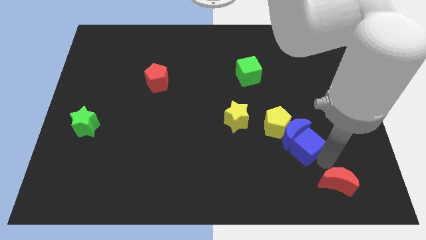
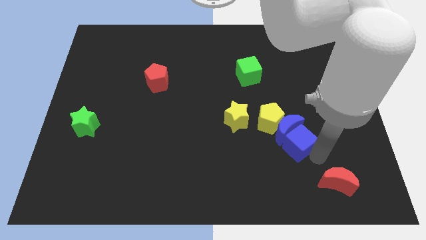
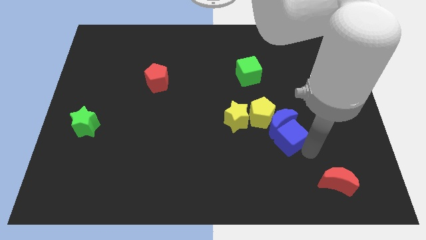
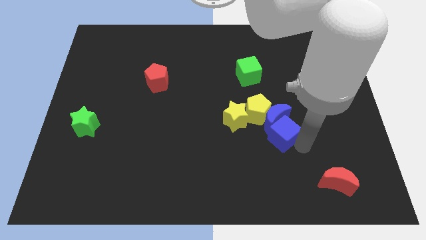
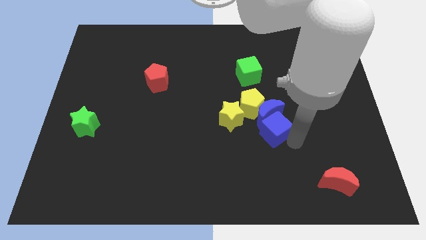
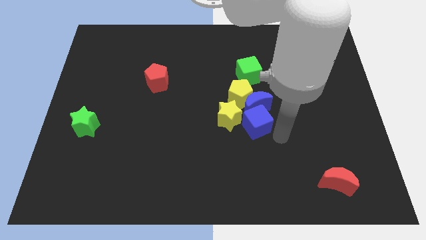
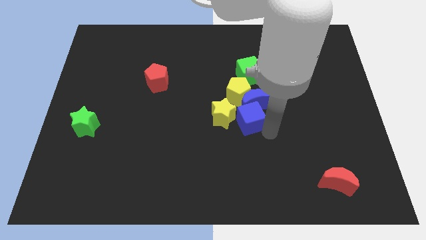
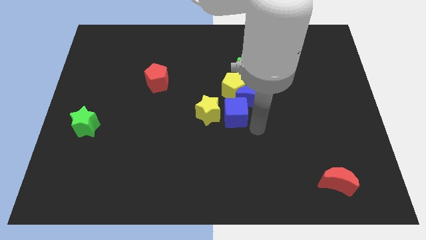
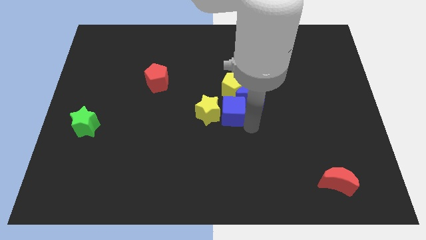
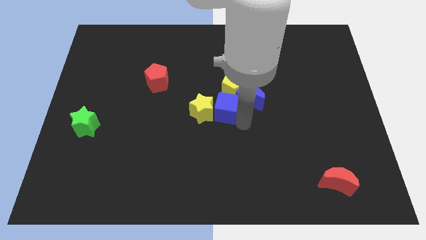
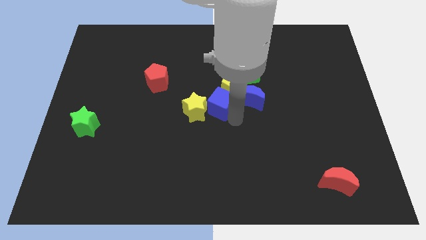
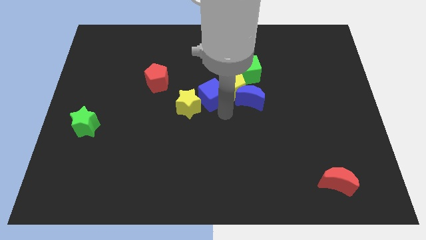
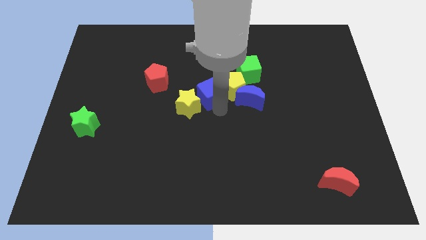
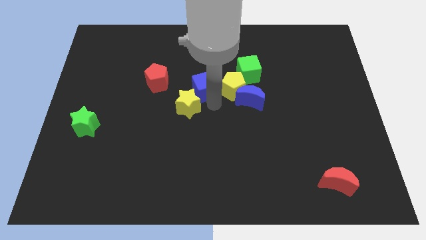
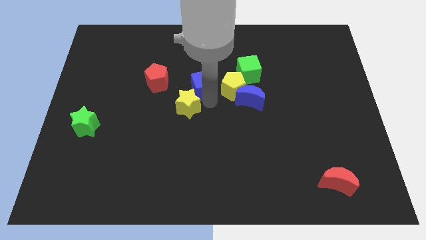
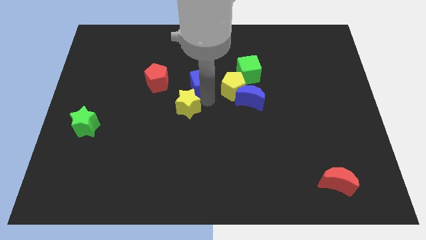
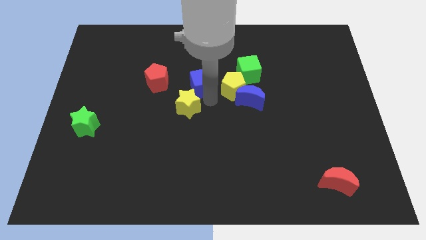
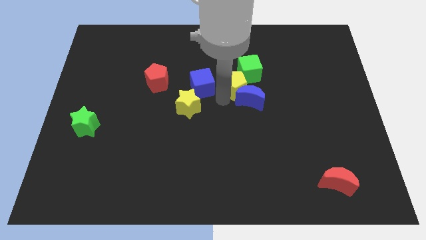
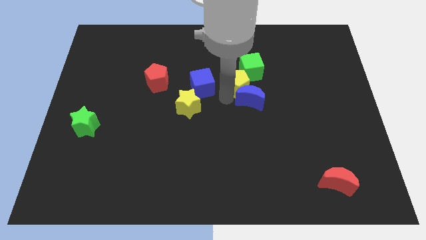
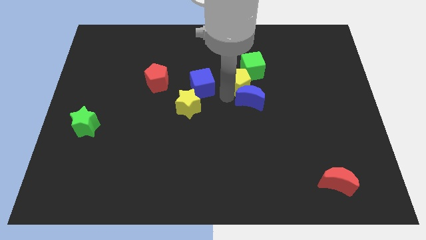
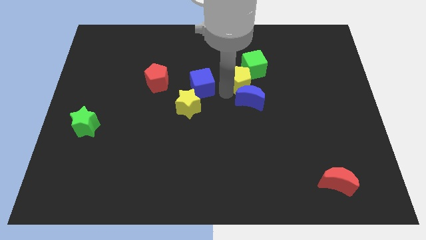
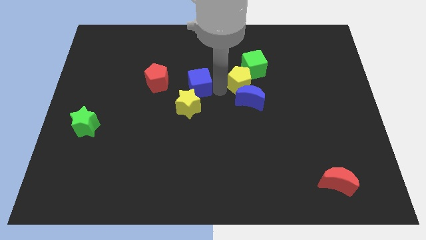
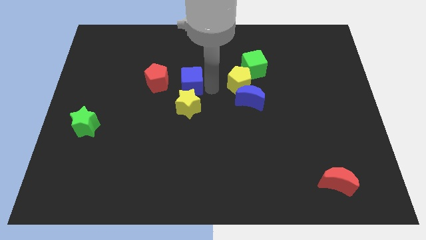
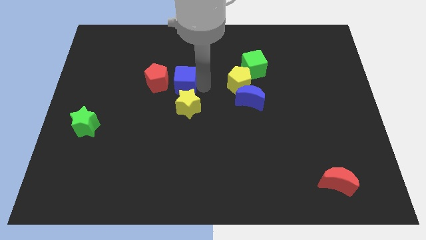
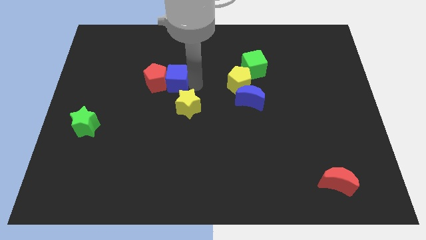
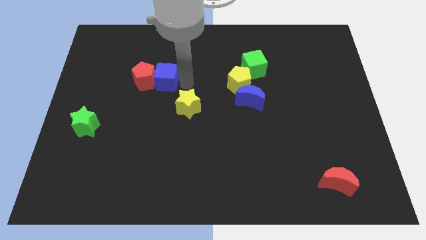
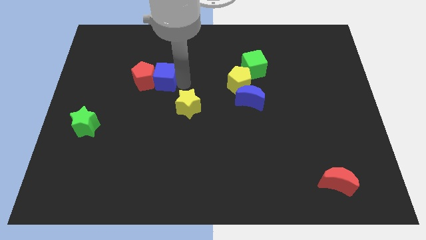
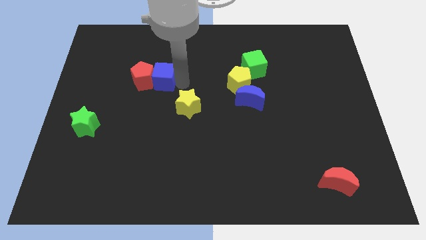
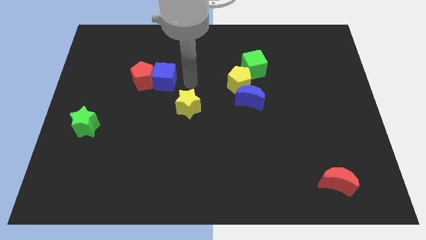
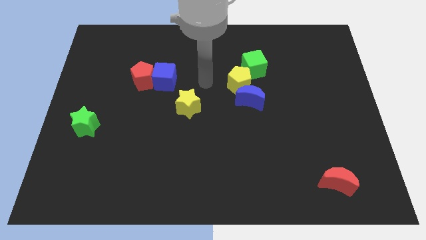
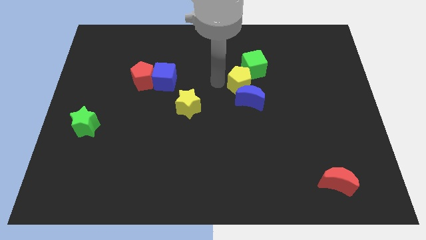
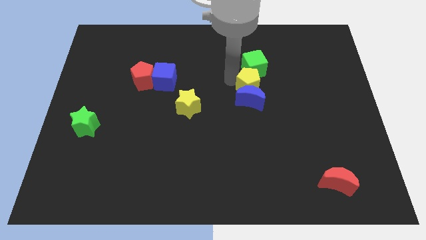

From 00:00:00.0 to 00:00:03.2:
move blue cube into the red pentagon

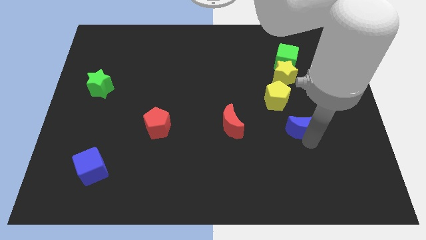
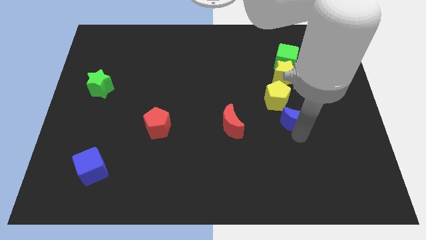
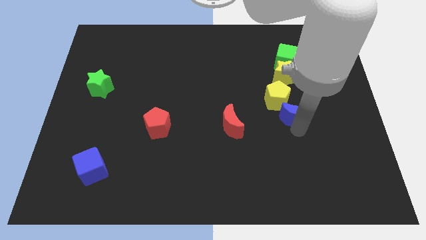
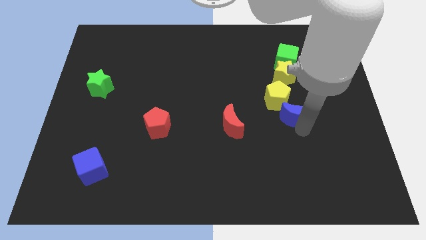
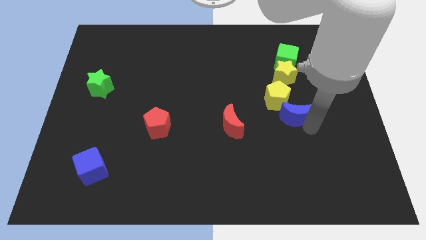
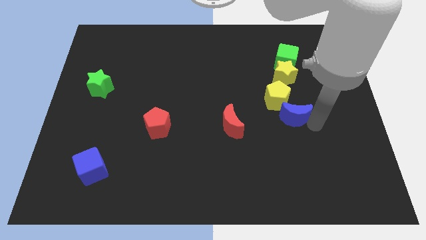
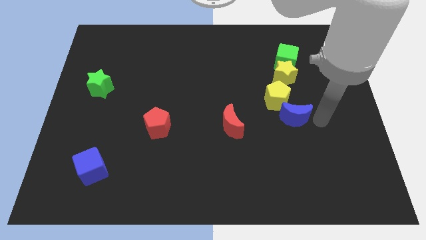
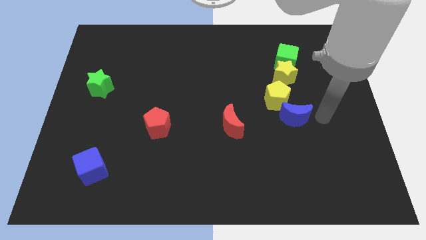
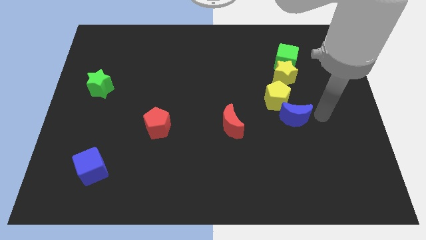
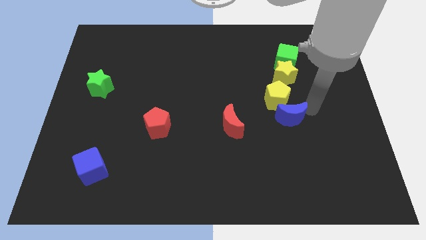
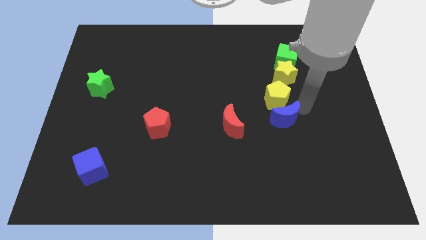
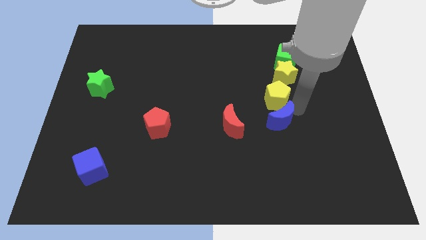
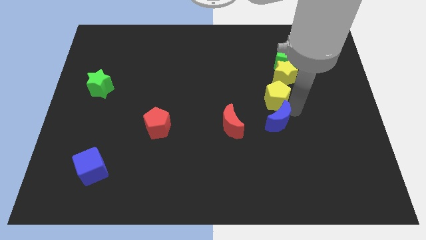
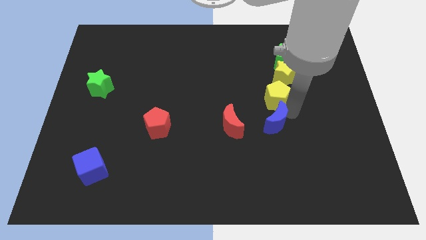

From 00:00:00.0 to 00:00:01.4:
put the blue moon vertically below the yellow pentagon

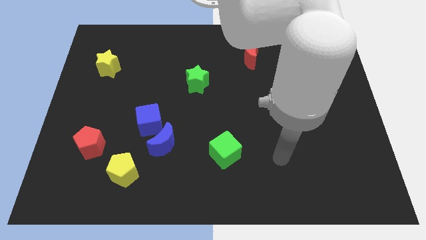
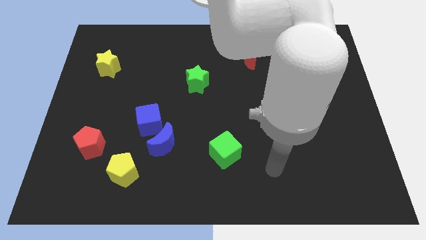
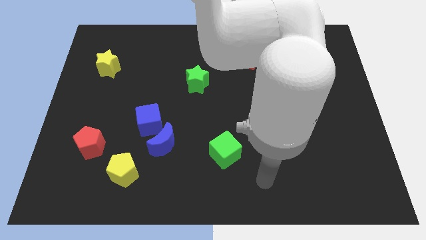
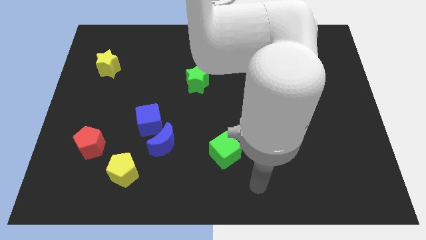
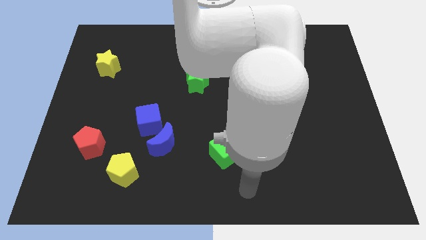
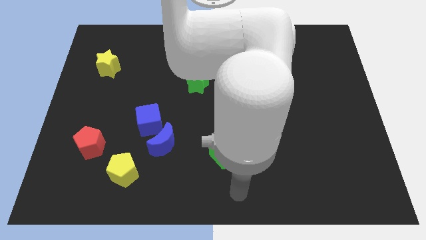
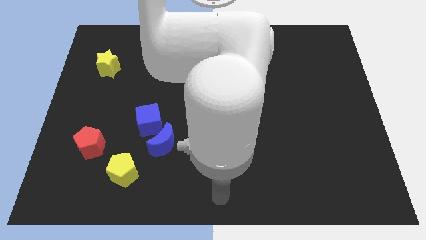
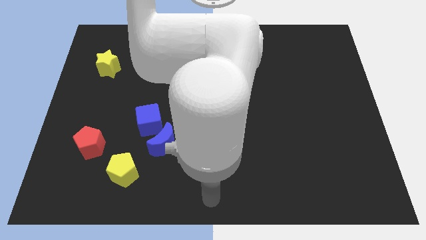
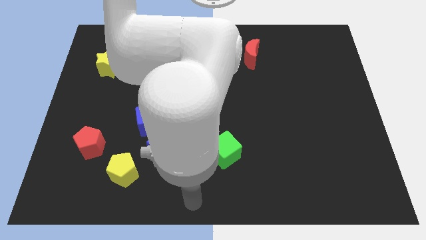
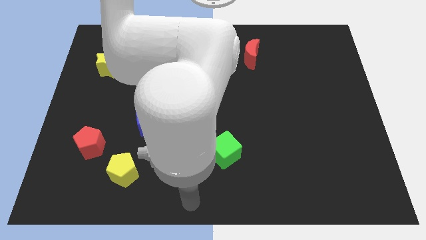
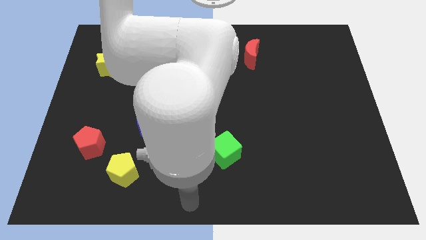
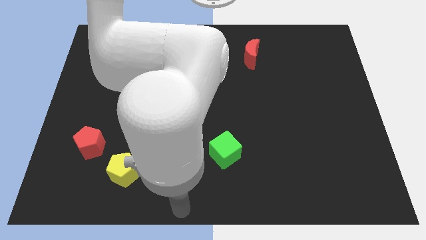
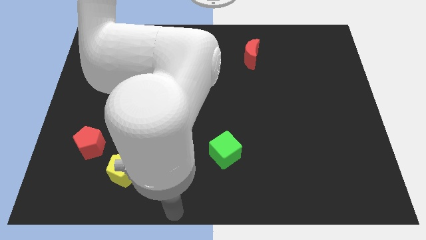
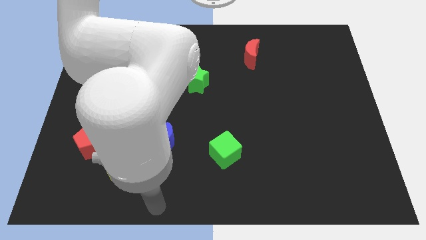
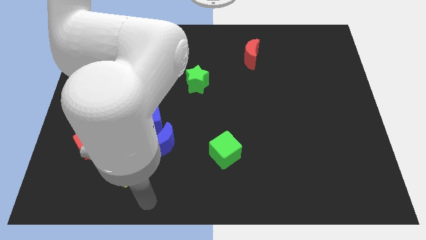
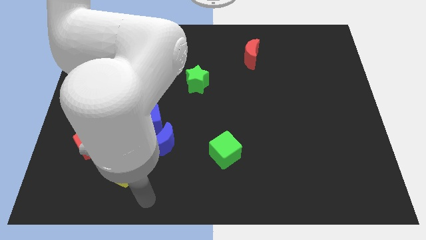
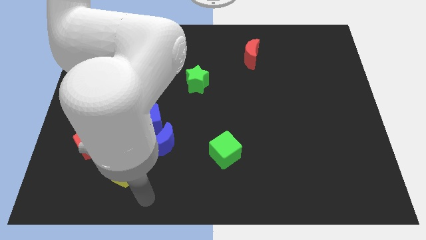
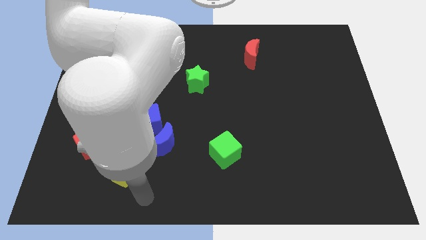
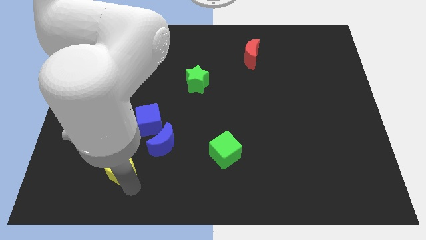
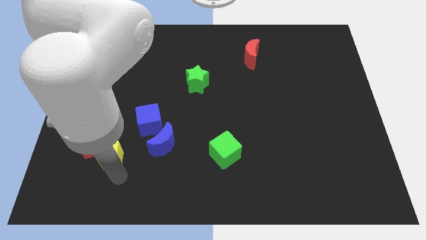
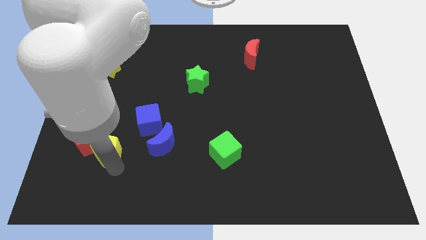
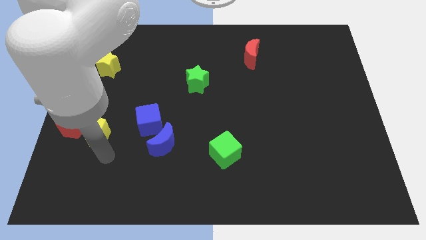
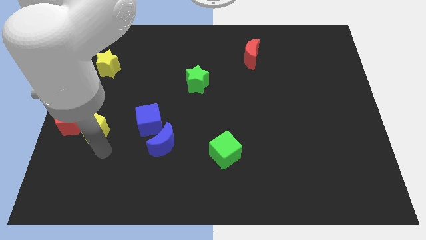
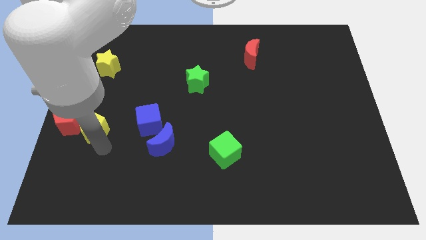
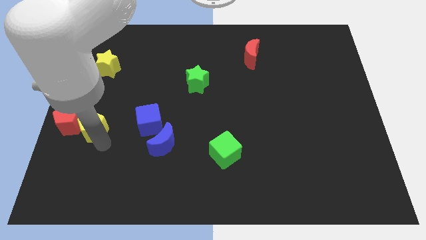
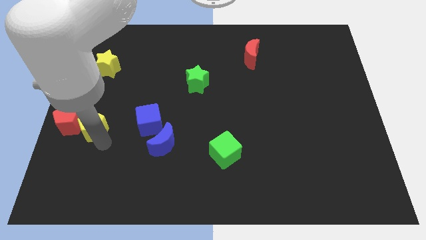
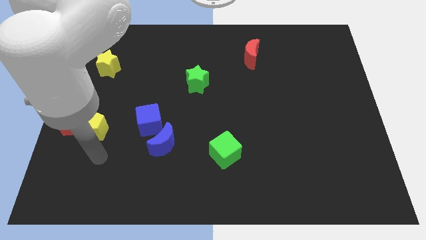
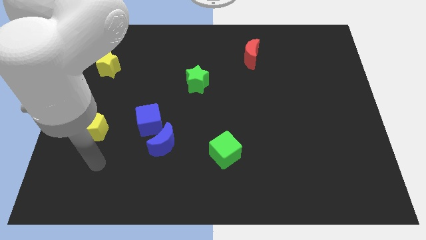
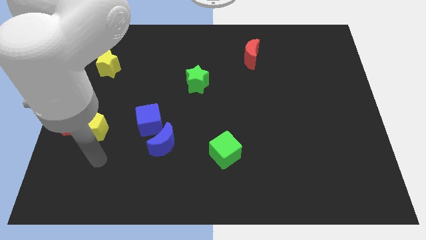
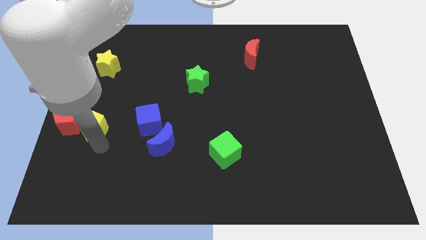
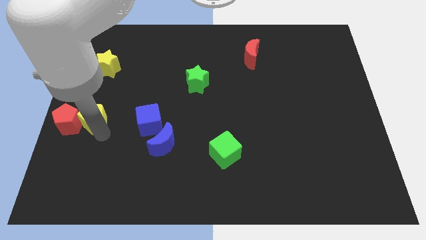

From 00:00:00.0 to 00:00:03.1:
push yellow star into red pentagon

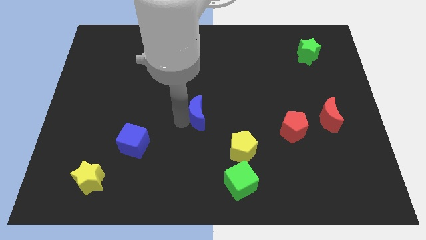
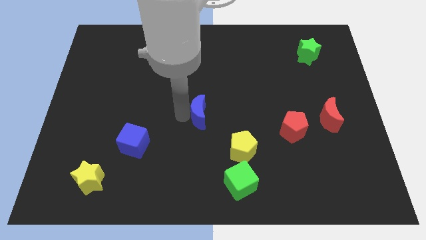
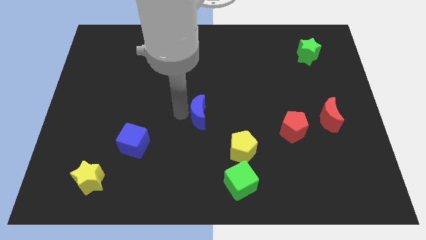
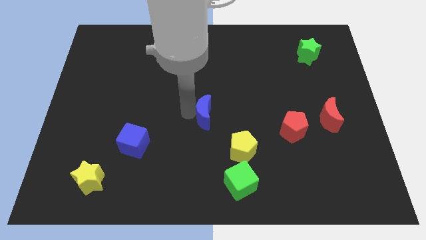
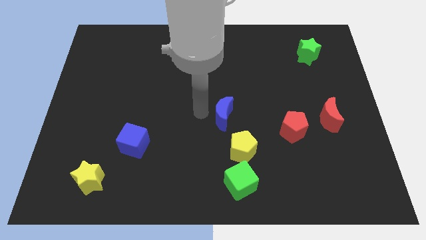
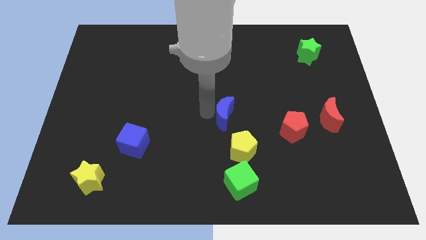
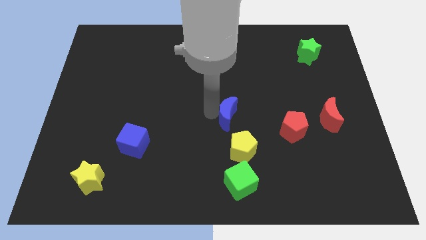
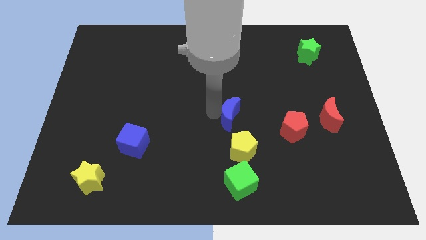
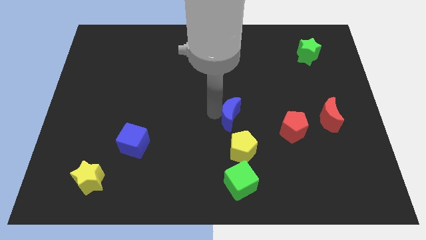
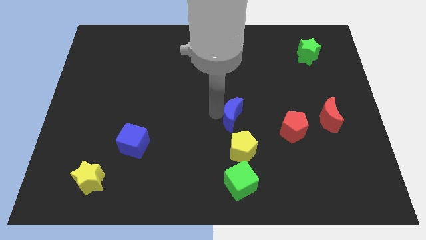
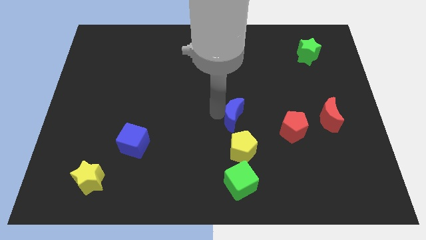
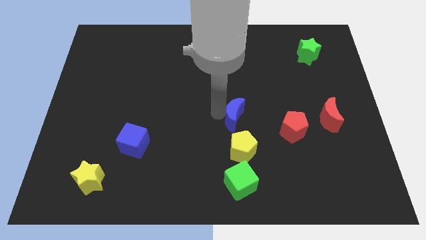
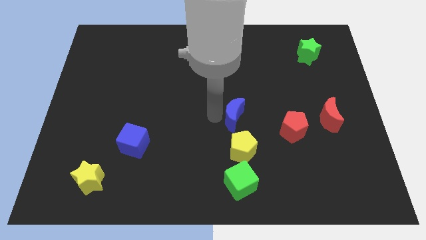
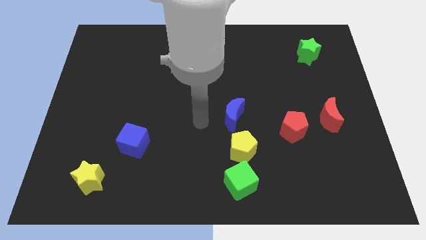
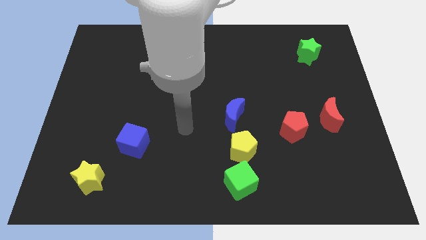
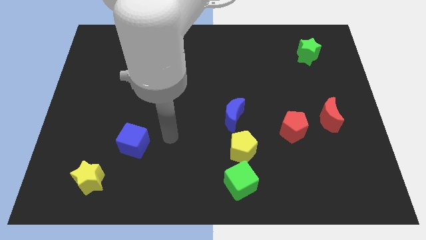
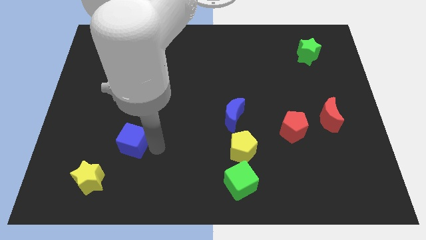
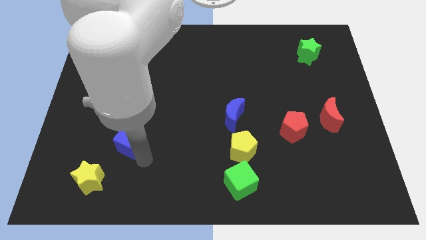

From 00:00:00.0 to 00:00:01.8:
push blue moon left above the yellow pentagon
